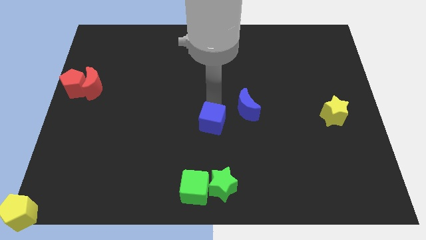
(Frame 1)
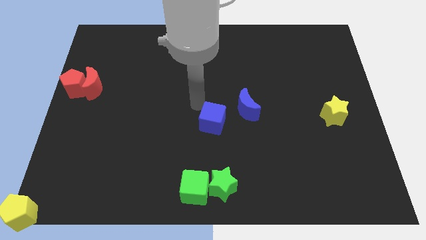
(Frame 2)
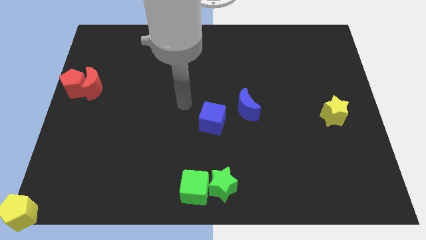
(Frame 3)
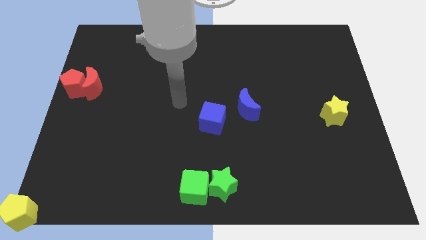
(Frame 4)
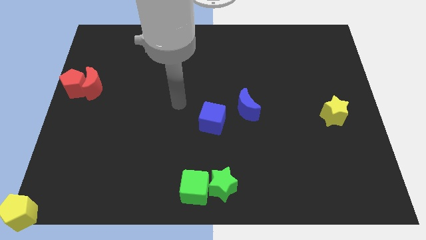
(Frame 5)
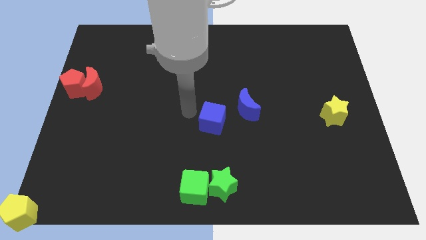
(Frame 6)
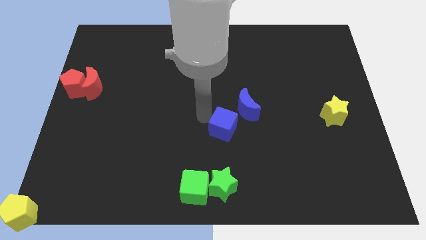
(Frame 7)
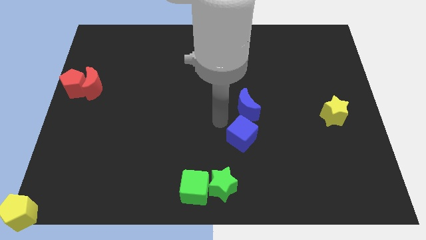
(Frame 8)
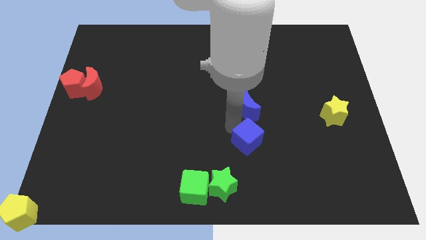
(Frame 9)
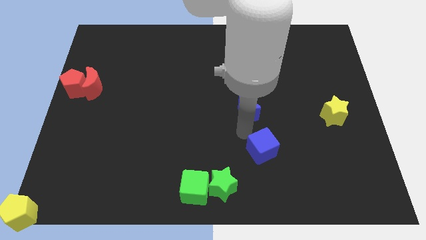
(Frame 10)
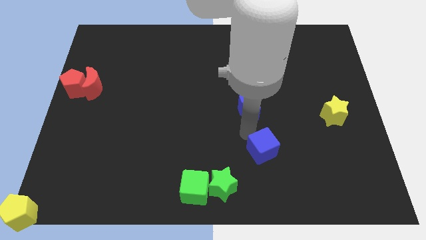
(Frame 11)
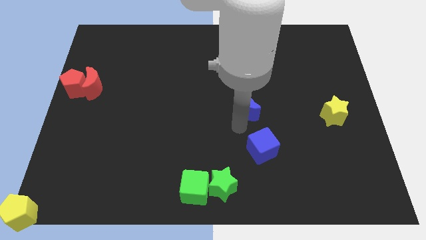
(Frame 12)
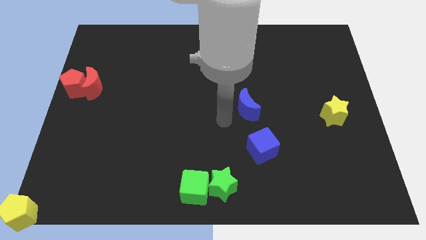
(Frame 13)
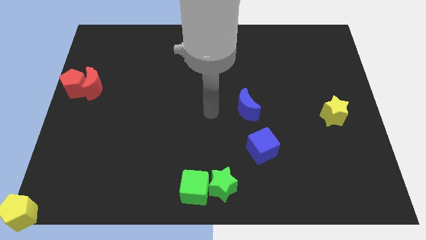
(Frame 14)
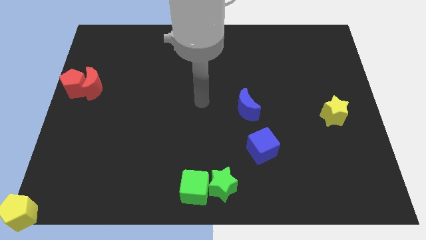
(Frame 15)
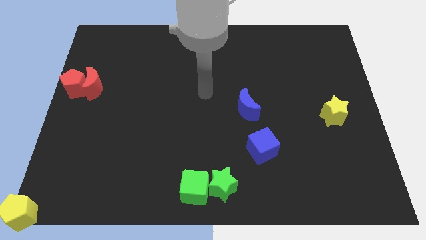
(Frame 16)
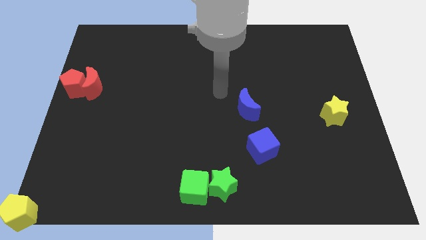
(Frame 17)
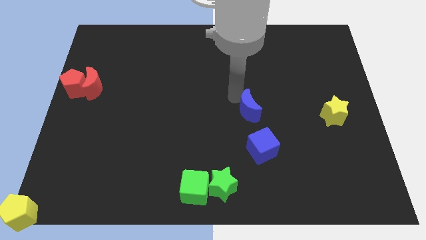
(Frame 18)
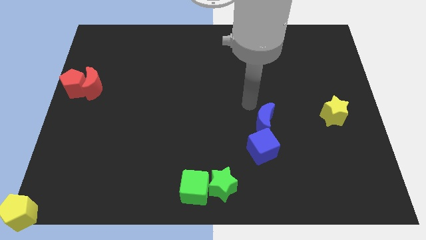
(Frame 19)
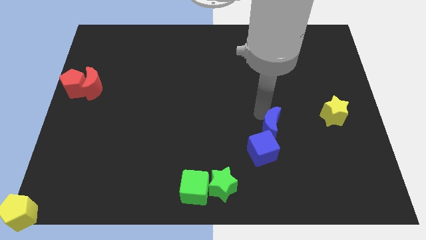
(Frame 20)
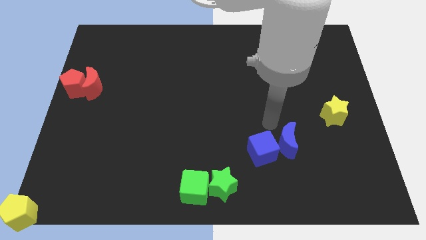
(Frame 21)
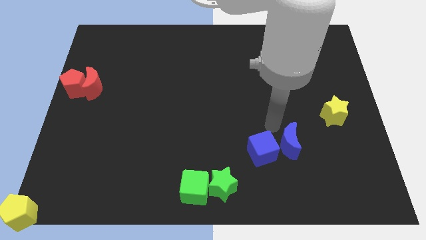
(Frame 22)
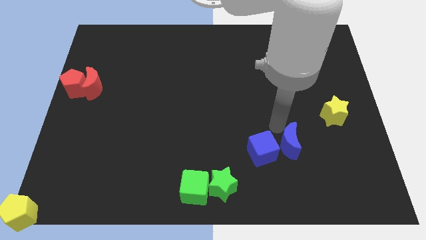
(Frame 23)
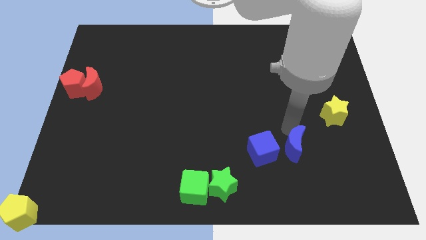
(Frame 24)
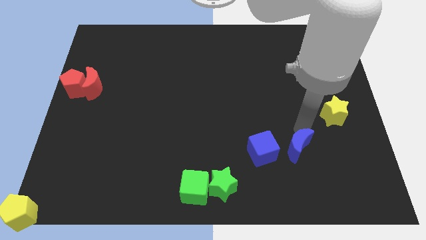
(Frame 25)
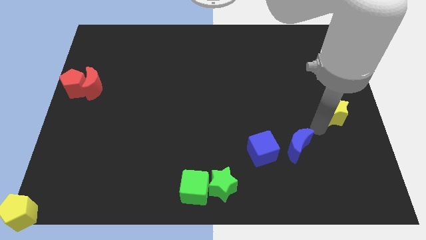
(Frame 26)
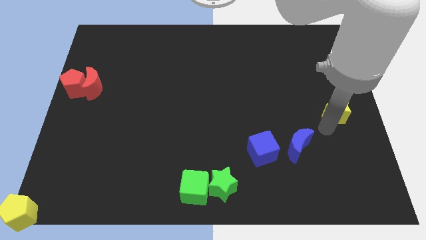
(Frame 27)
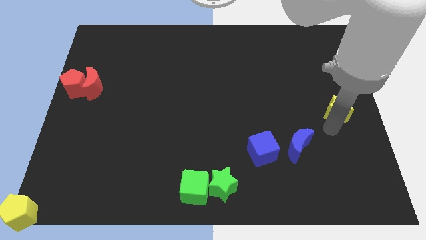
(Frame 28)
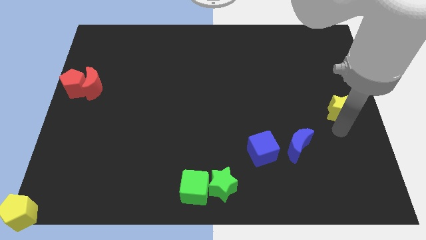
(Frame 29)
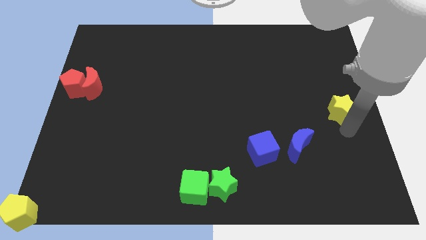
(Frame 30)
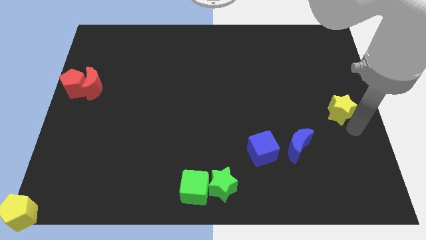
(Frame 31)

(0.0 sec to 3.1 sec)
move the blue blocks to bottom center

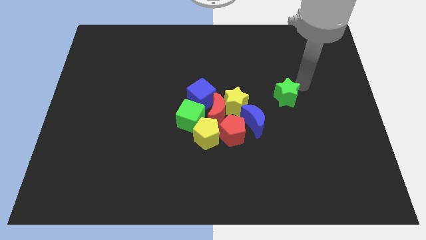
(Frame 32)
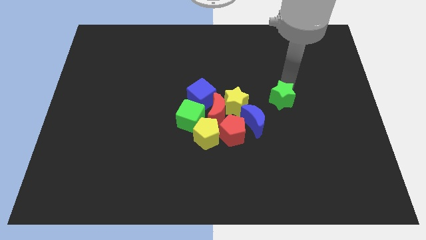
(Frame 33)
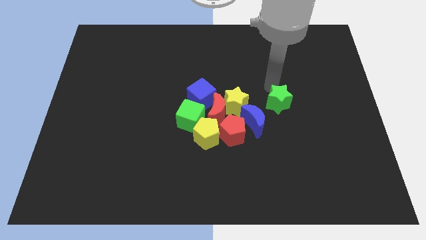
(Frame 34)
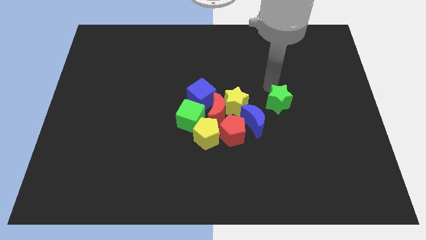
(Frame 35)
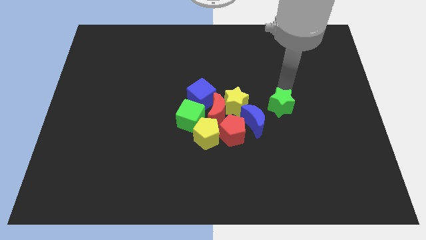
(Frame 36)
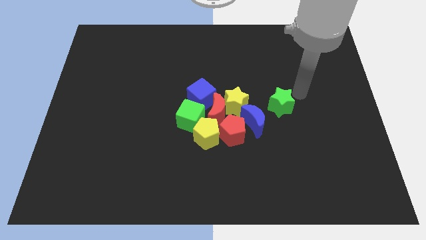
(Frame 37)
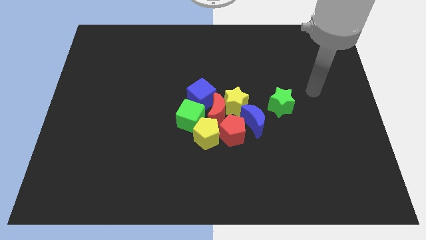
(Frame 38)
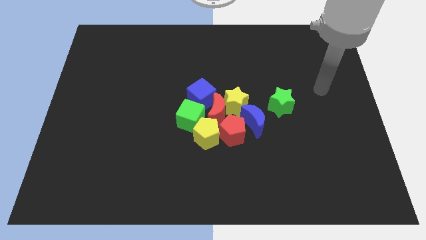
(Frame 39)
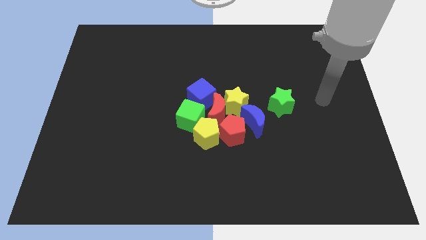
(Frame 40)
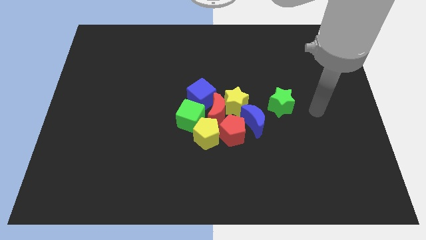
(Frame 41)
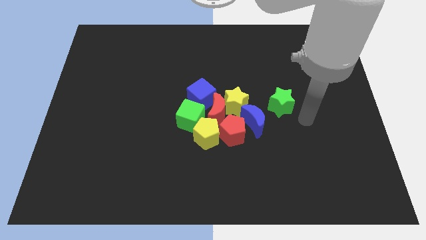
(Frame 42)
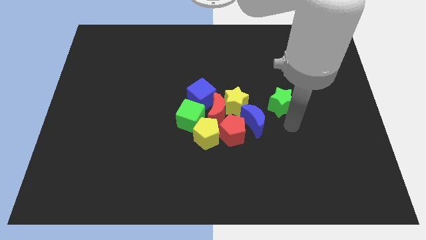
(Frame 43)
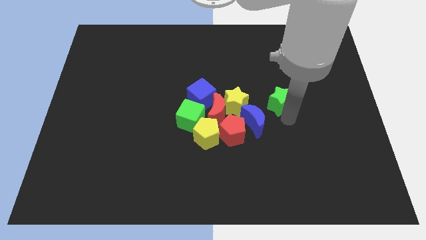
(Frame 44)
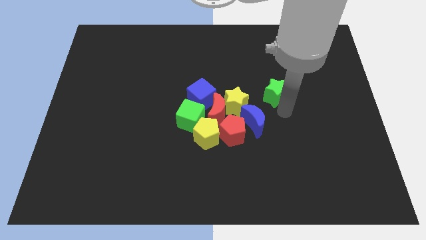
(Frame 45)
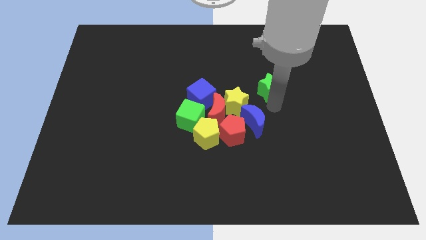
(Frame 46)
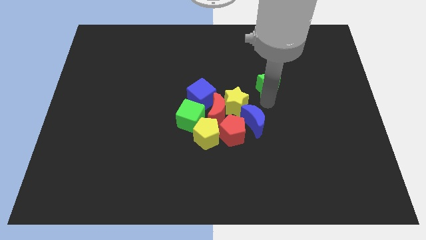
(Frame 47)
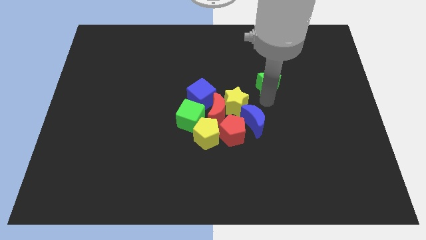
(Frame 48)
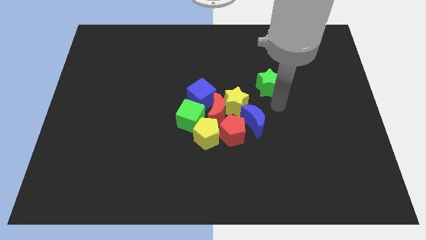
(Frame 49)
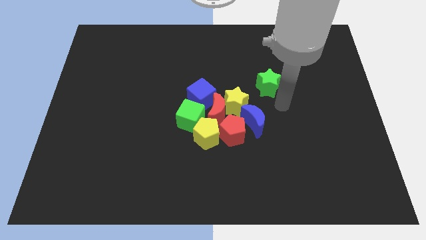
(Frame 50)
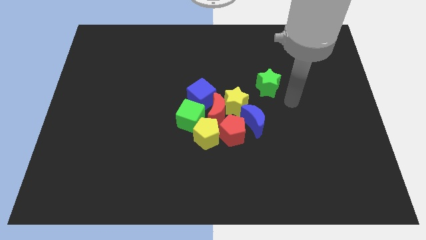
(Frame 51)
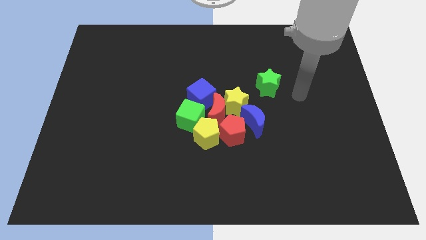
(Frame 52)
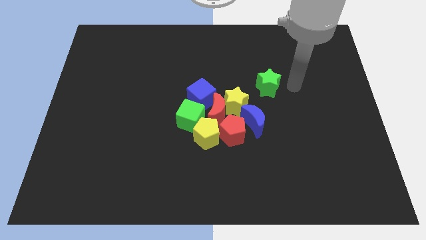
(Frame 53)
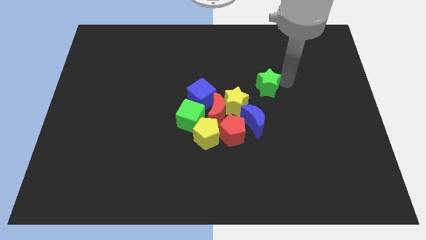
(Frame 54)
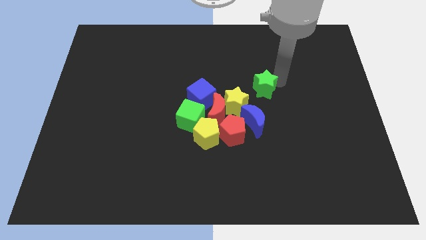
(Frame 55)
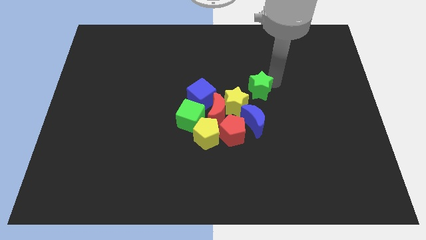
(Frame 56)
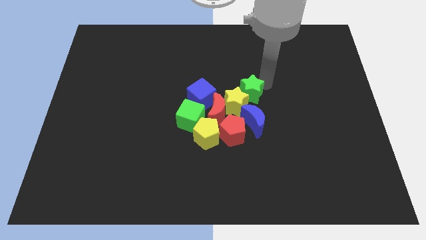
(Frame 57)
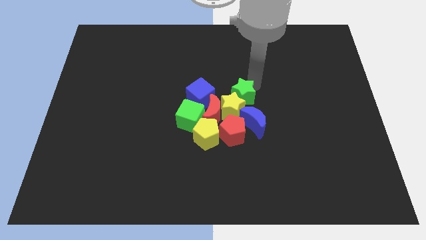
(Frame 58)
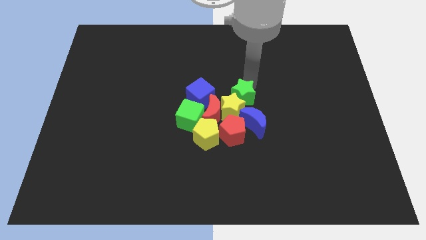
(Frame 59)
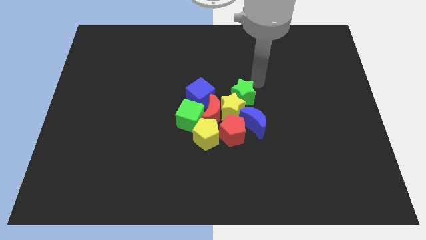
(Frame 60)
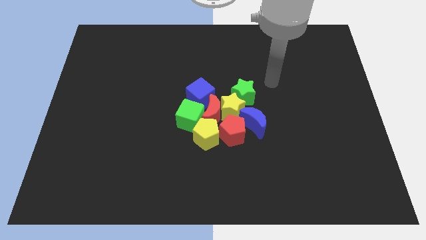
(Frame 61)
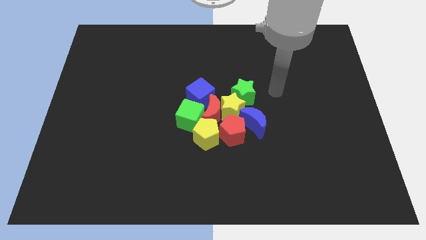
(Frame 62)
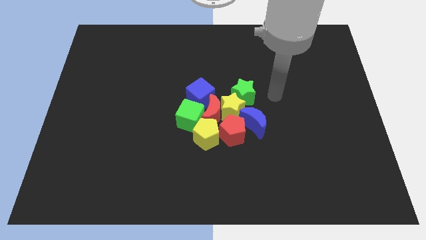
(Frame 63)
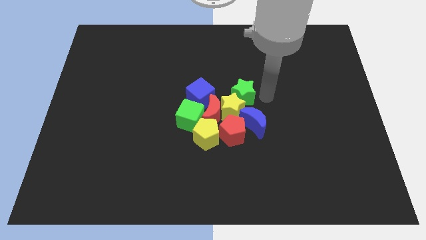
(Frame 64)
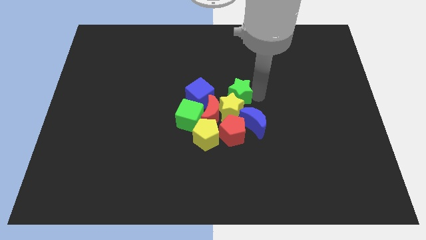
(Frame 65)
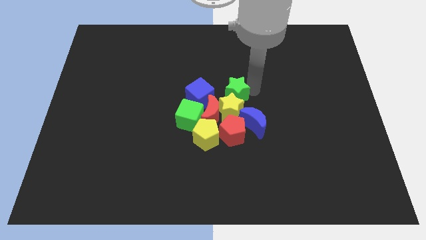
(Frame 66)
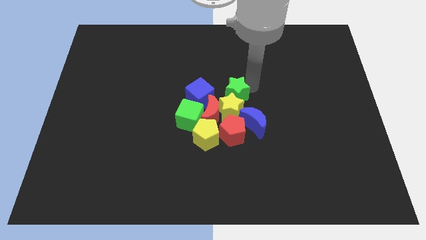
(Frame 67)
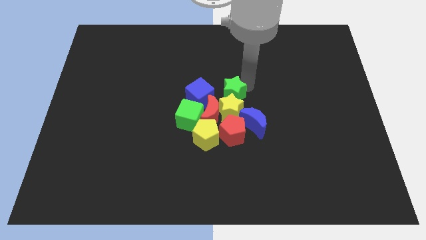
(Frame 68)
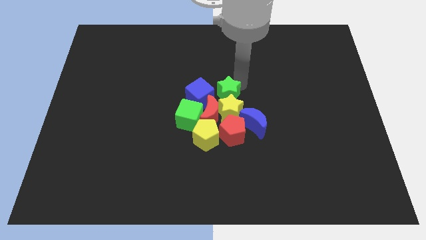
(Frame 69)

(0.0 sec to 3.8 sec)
move the green star to the top of the yellow star

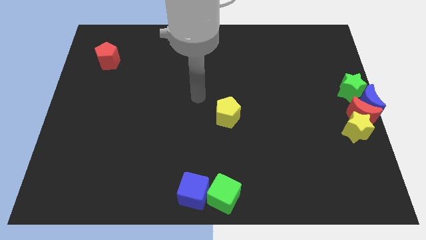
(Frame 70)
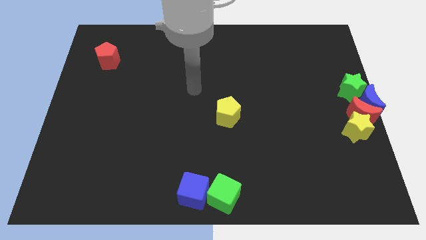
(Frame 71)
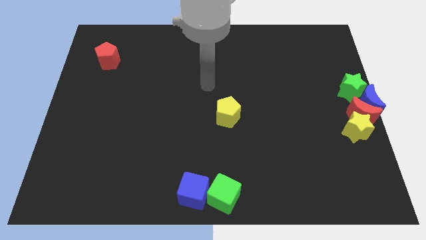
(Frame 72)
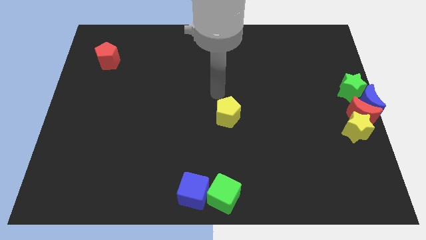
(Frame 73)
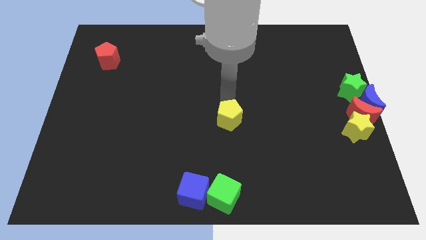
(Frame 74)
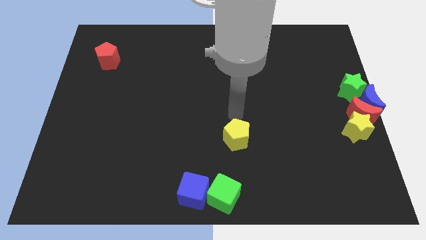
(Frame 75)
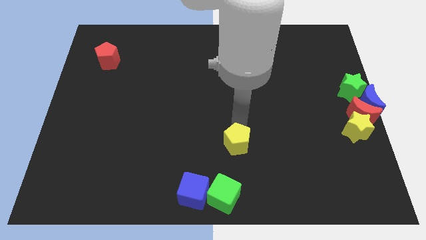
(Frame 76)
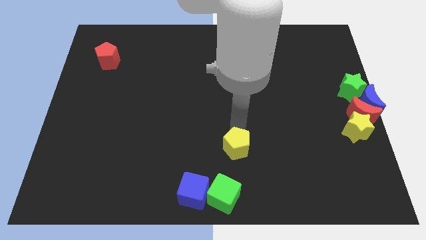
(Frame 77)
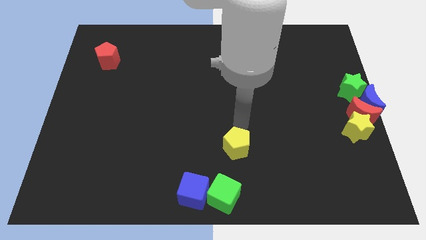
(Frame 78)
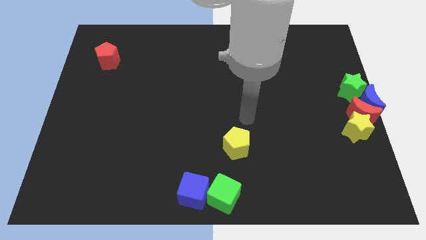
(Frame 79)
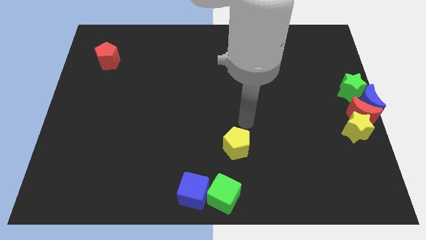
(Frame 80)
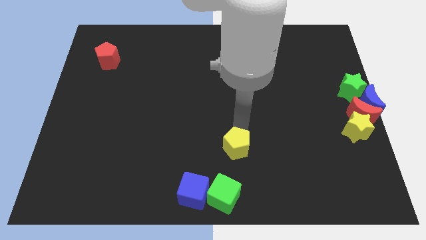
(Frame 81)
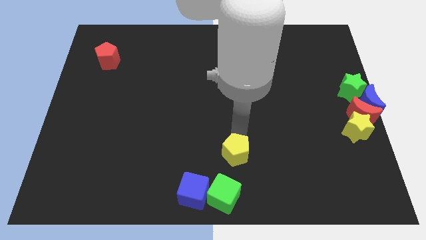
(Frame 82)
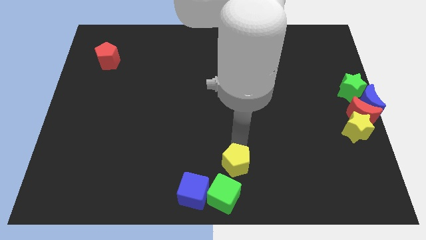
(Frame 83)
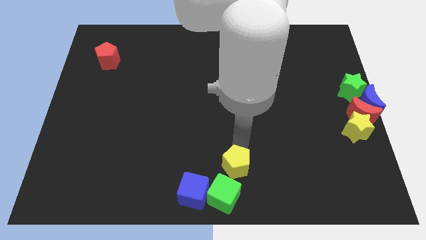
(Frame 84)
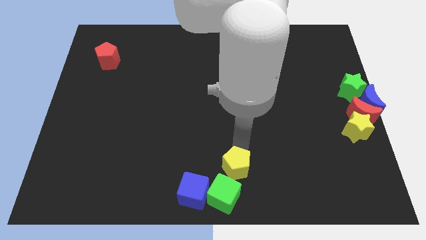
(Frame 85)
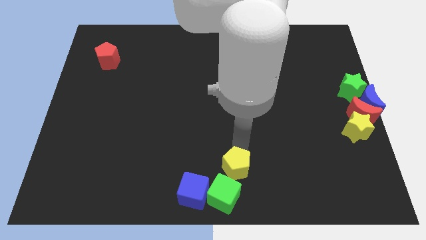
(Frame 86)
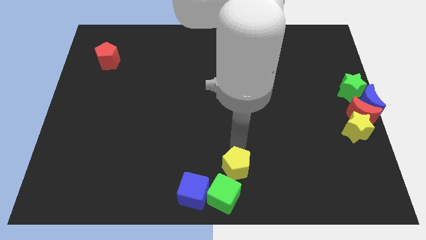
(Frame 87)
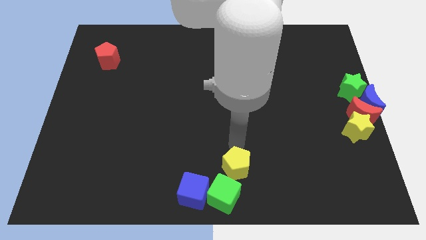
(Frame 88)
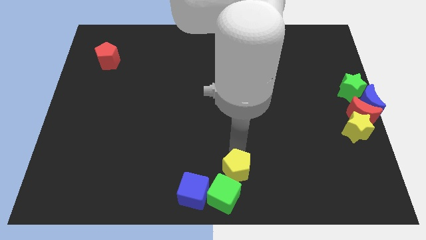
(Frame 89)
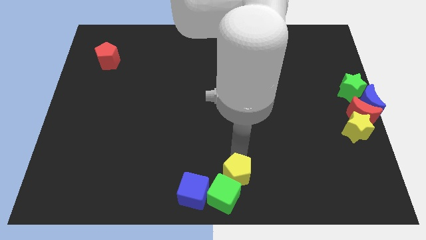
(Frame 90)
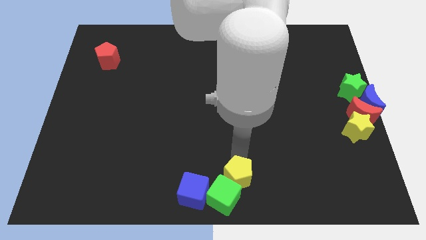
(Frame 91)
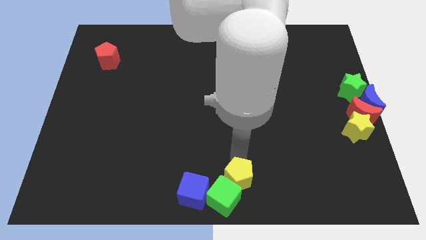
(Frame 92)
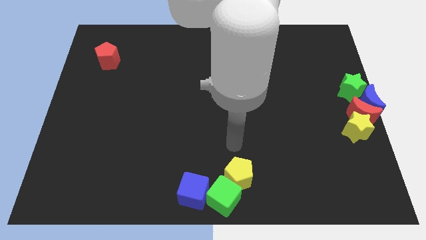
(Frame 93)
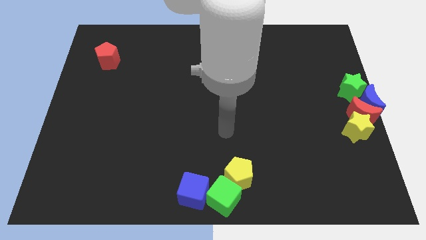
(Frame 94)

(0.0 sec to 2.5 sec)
drag the yellow pentagon into the green cube
